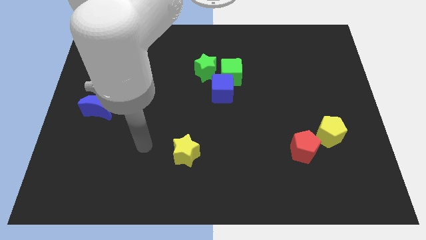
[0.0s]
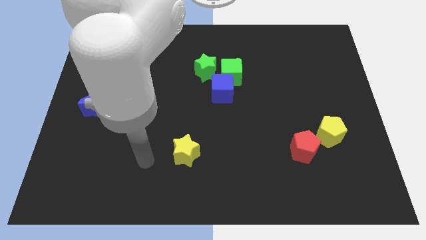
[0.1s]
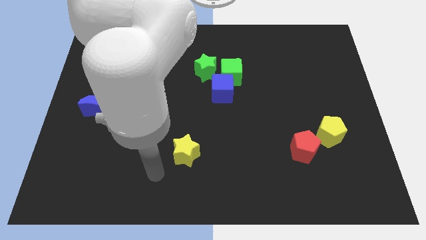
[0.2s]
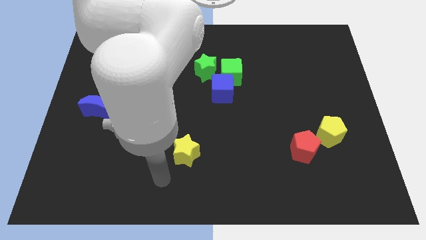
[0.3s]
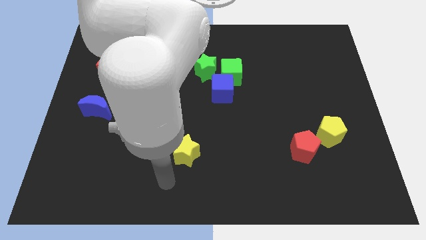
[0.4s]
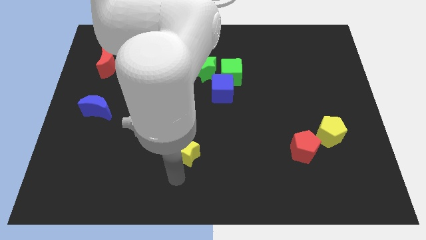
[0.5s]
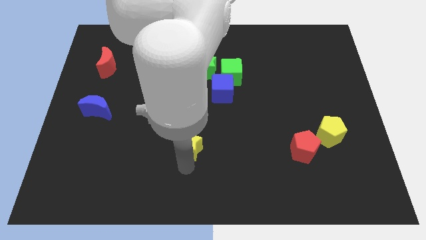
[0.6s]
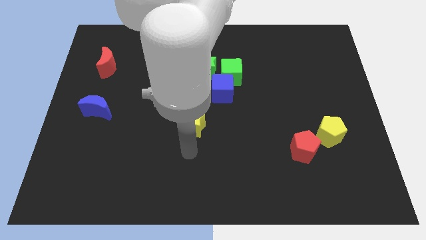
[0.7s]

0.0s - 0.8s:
touch the bottom of yellow star

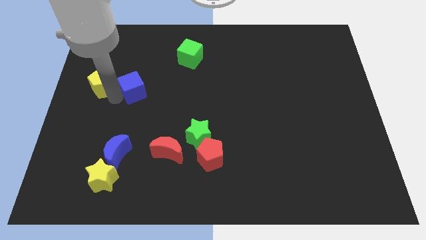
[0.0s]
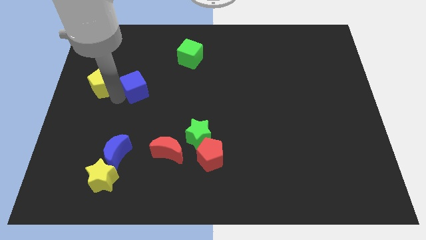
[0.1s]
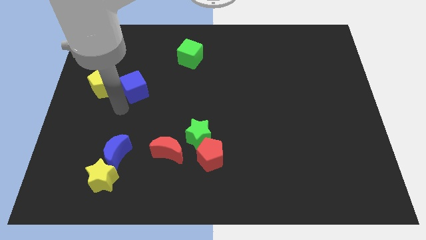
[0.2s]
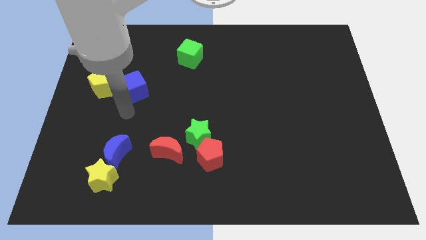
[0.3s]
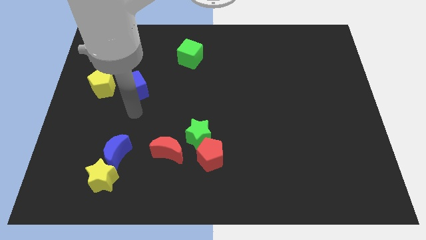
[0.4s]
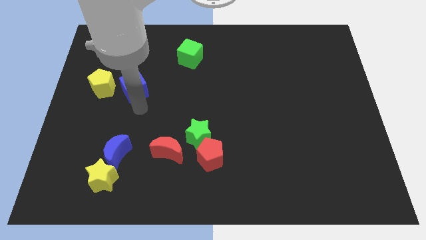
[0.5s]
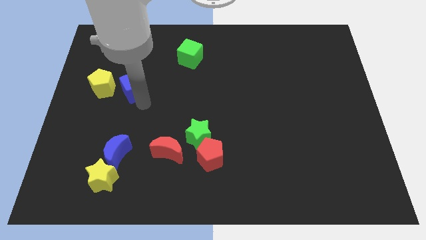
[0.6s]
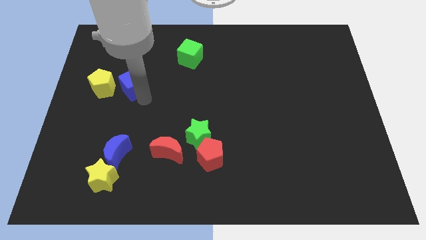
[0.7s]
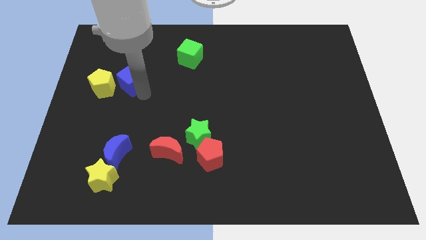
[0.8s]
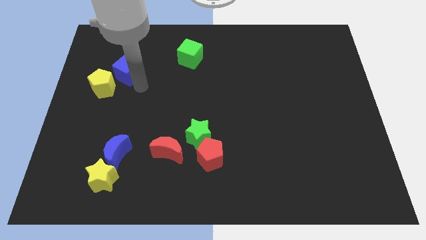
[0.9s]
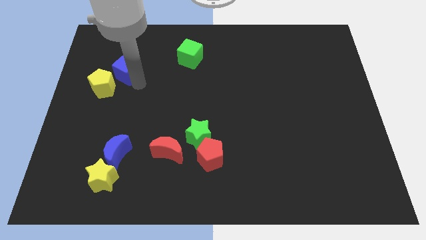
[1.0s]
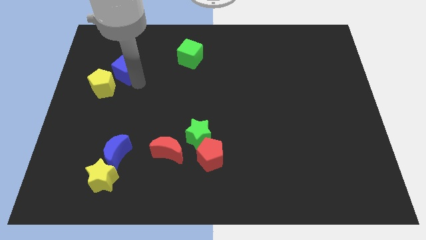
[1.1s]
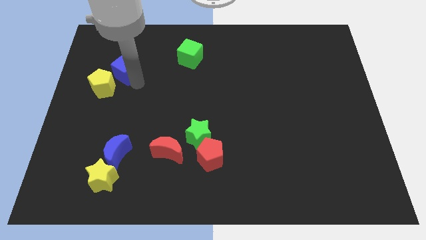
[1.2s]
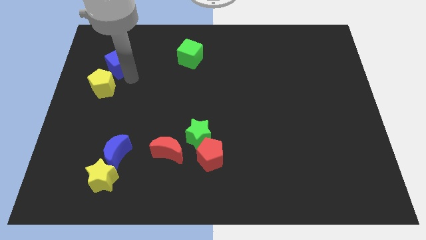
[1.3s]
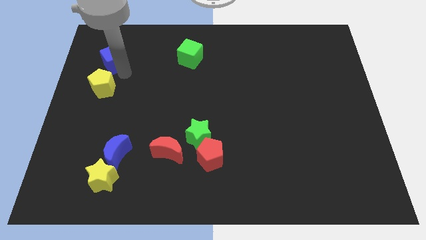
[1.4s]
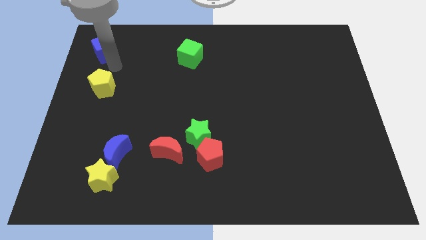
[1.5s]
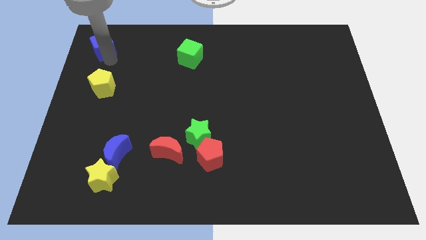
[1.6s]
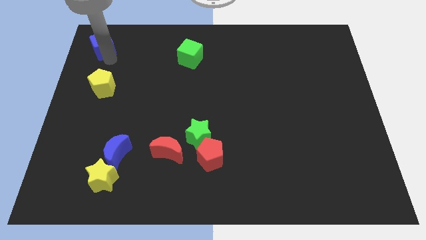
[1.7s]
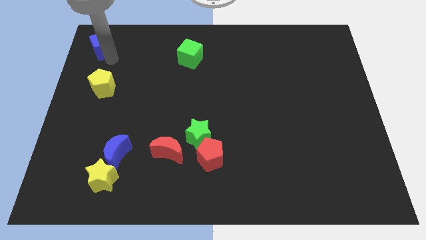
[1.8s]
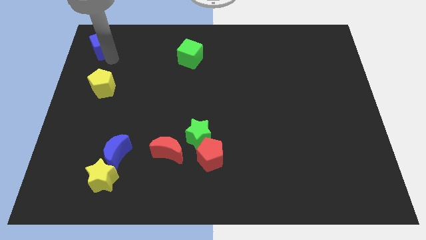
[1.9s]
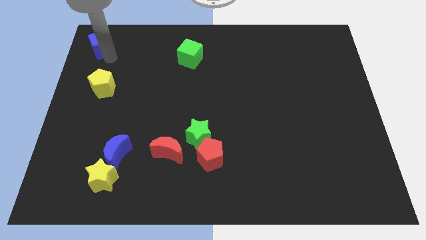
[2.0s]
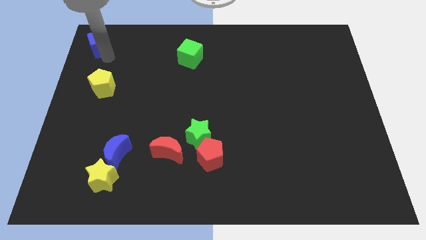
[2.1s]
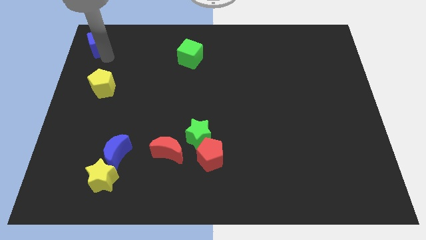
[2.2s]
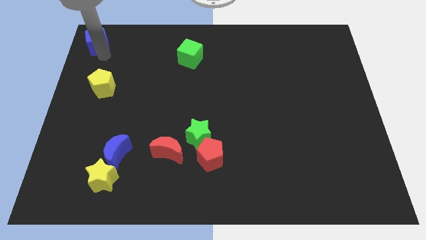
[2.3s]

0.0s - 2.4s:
place the blue cube to the top left of the board

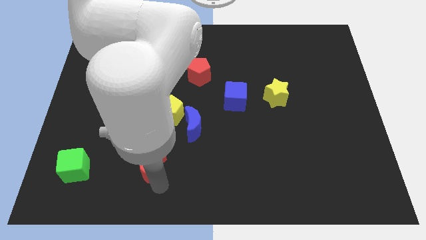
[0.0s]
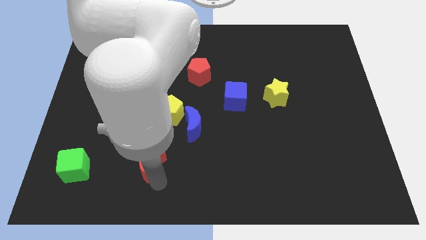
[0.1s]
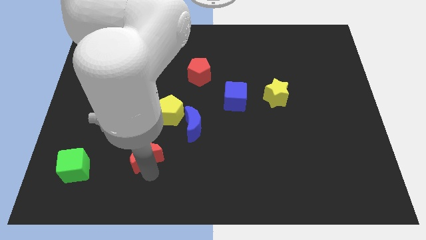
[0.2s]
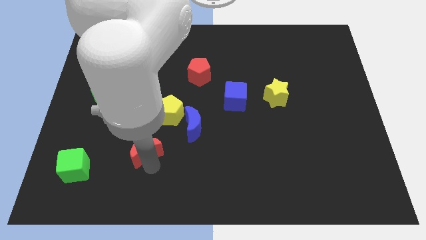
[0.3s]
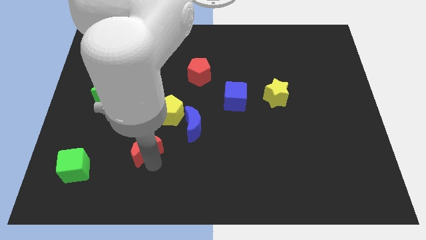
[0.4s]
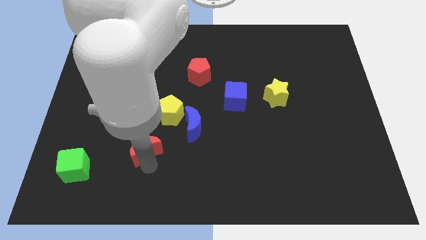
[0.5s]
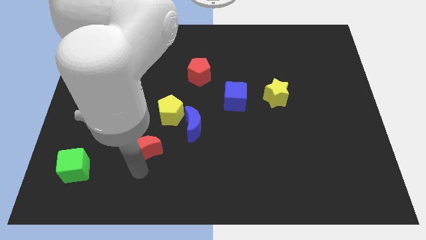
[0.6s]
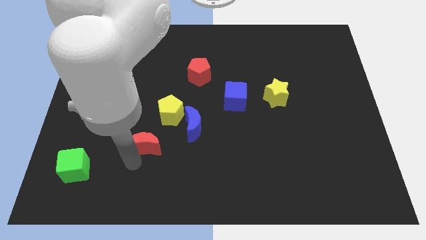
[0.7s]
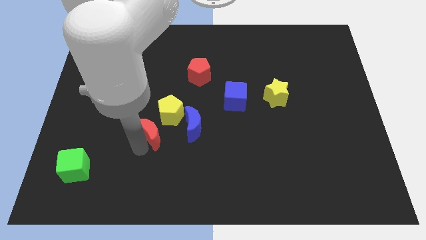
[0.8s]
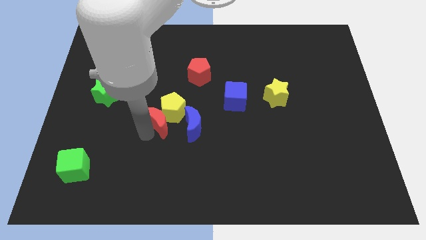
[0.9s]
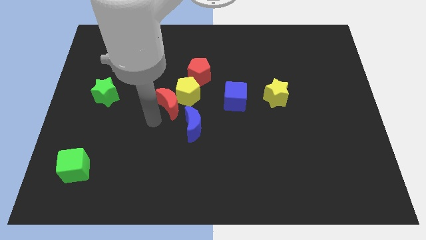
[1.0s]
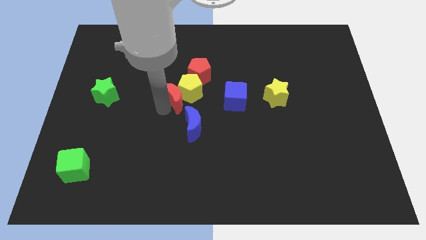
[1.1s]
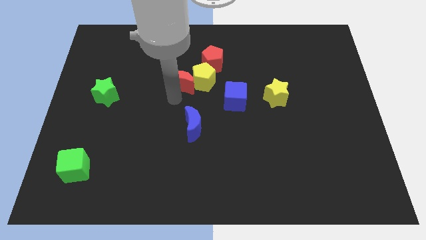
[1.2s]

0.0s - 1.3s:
push the yellow pentagon with red crescent towards the red pentagon

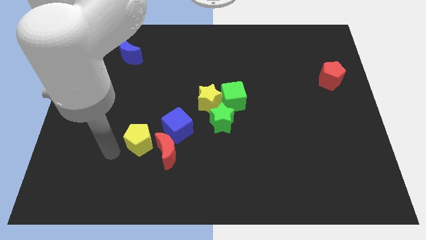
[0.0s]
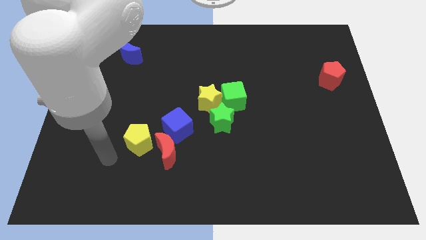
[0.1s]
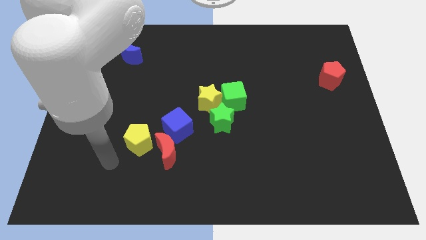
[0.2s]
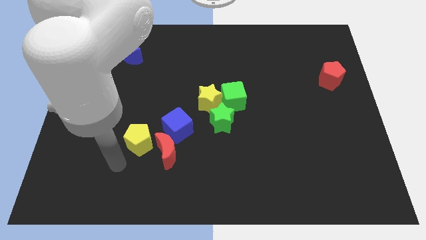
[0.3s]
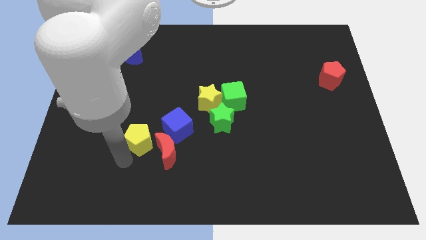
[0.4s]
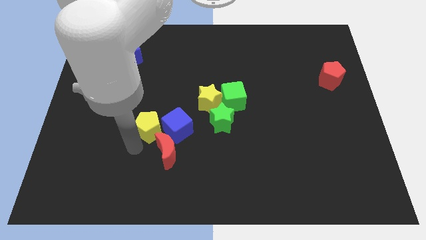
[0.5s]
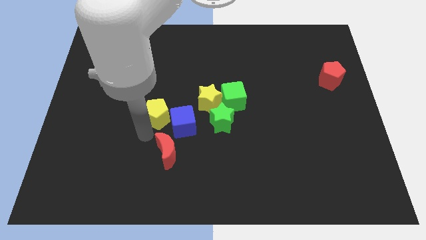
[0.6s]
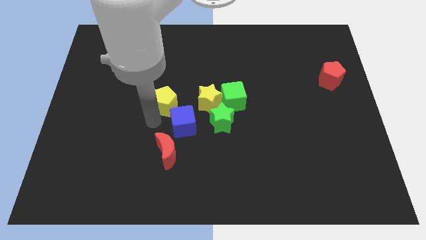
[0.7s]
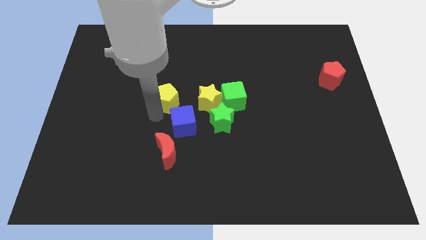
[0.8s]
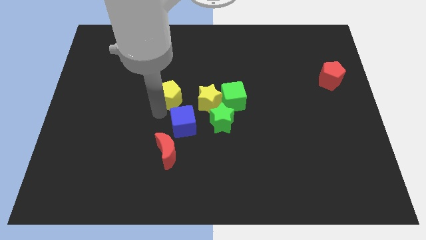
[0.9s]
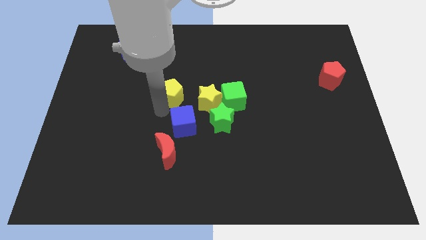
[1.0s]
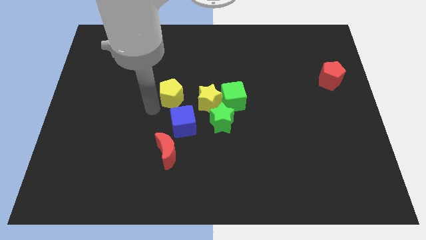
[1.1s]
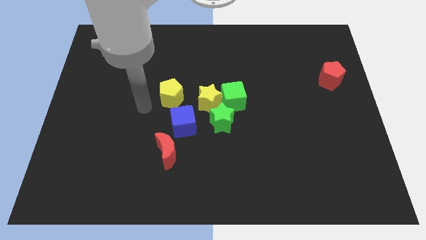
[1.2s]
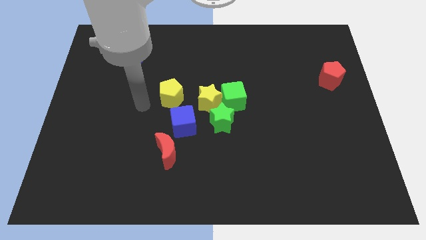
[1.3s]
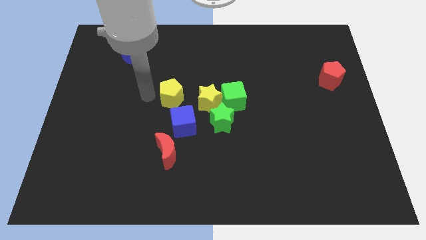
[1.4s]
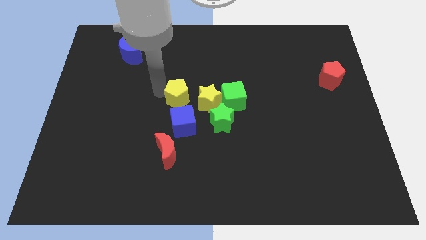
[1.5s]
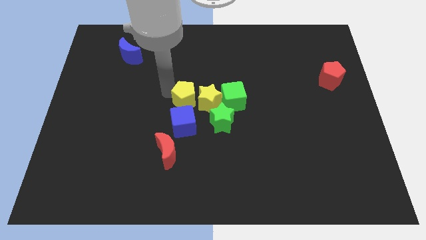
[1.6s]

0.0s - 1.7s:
place the yellow pentagon above the blue cube

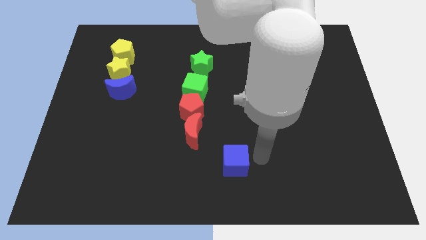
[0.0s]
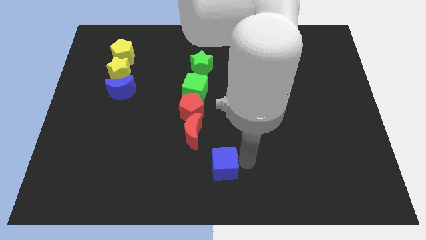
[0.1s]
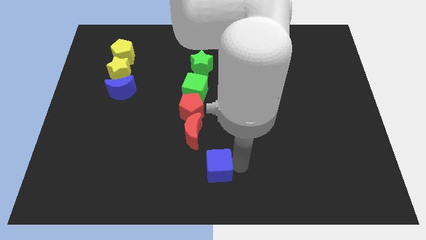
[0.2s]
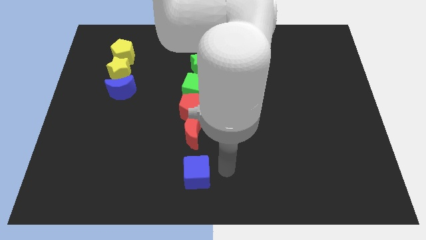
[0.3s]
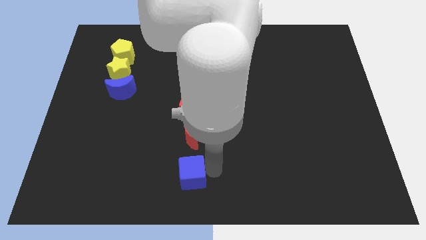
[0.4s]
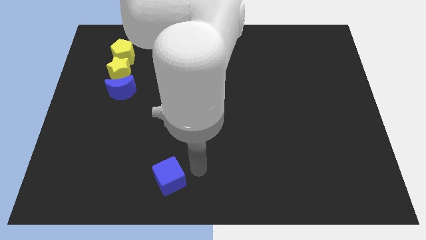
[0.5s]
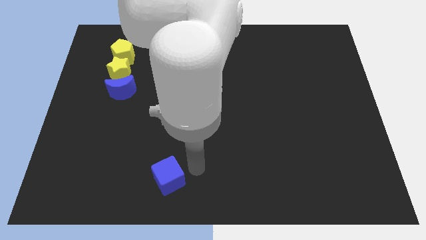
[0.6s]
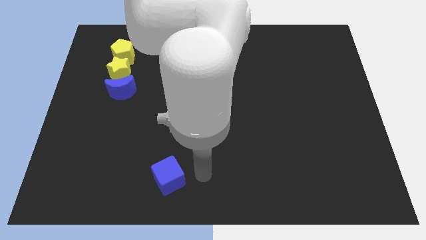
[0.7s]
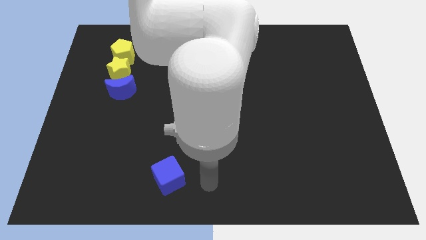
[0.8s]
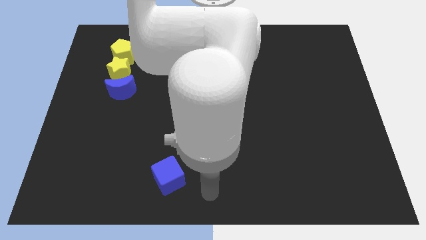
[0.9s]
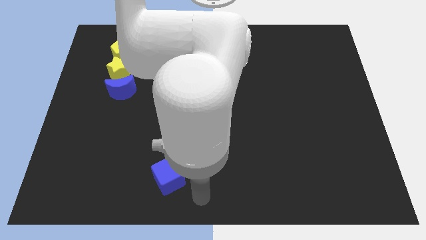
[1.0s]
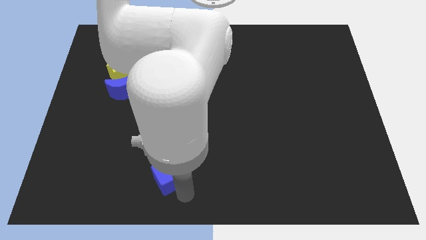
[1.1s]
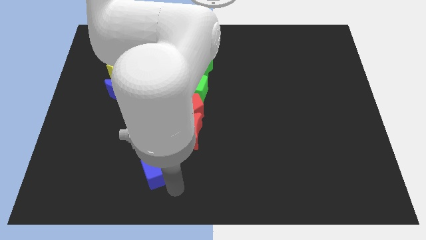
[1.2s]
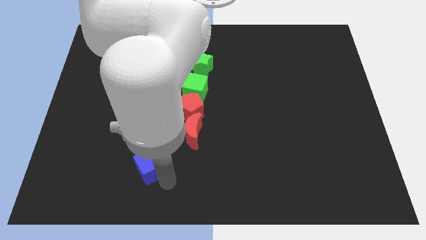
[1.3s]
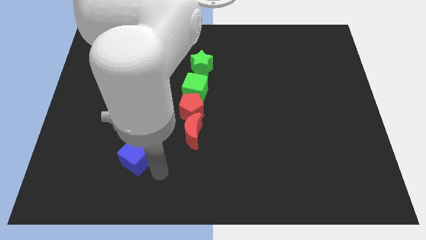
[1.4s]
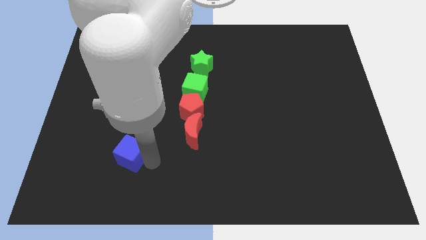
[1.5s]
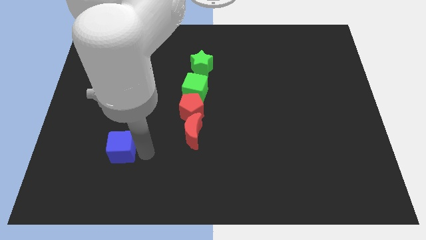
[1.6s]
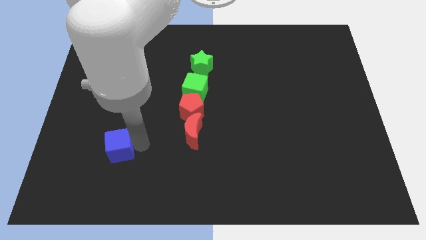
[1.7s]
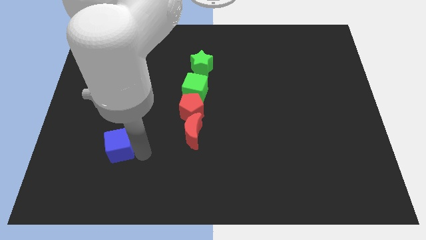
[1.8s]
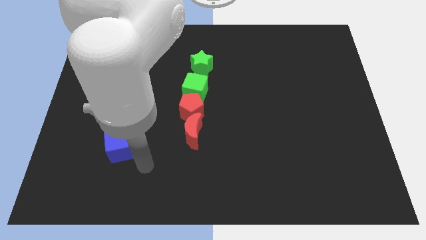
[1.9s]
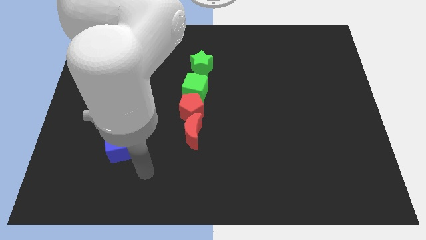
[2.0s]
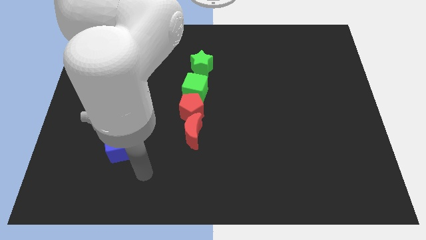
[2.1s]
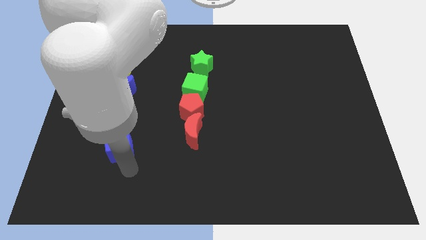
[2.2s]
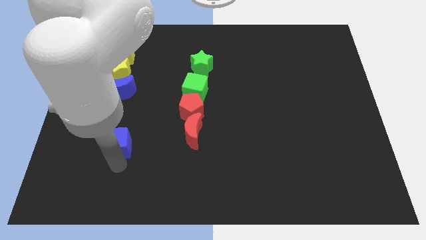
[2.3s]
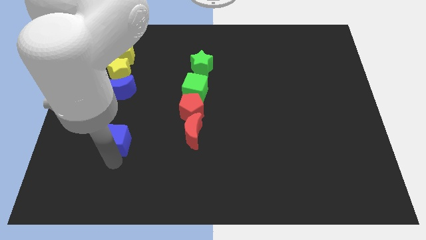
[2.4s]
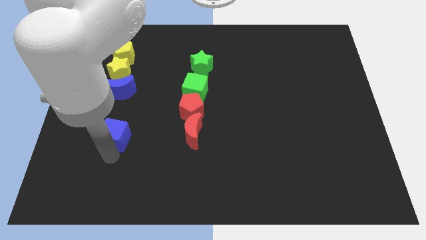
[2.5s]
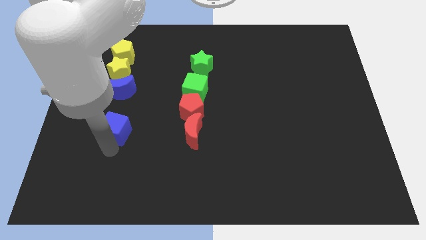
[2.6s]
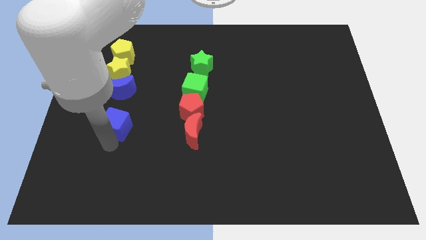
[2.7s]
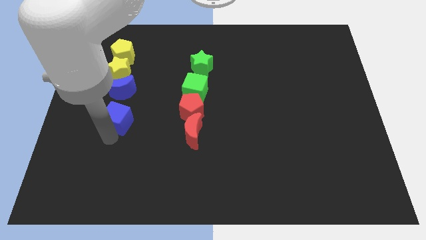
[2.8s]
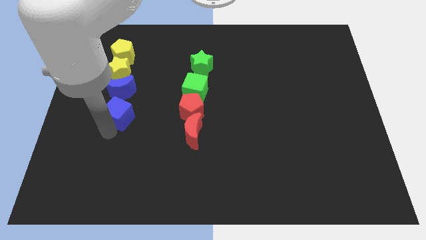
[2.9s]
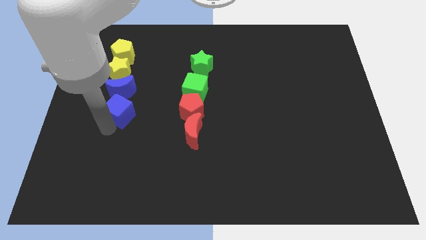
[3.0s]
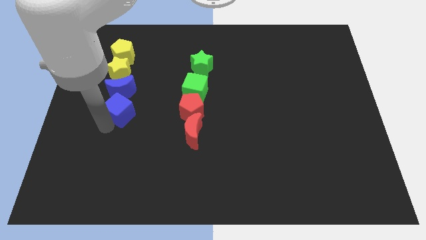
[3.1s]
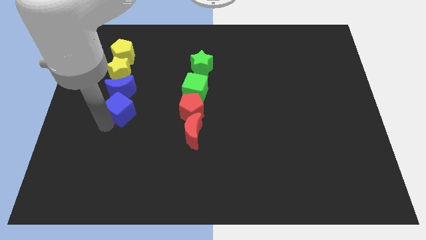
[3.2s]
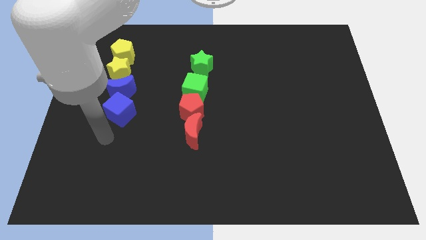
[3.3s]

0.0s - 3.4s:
place the blue cube below the blue moon
